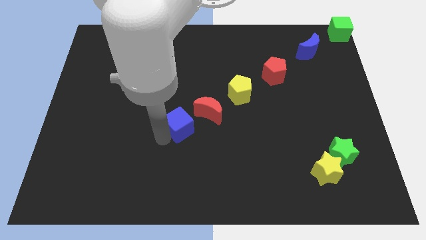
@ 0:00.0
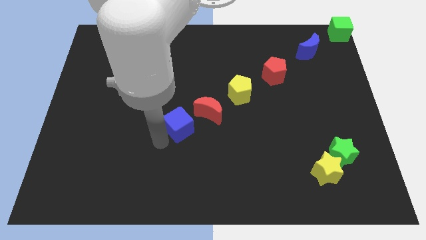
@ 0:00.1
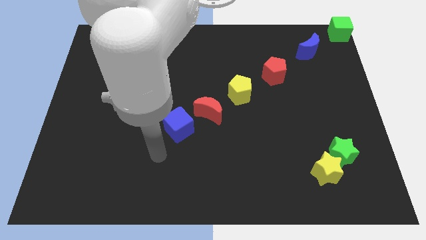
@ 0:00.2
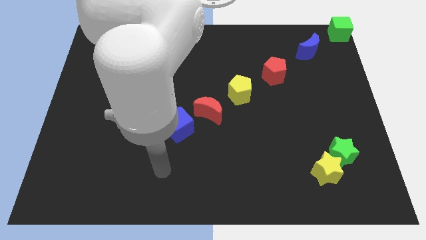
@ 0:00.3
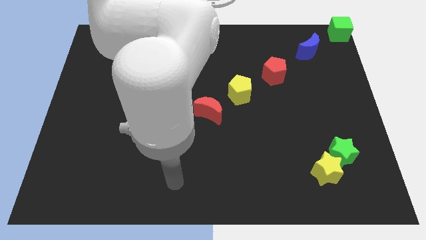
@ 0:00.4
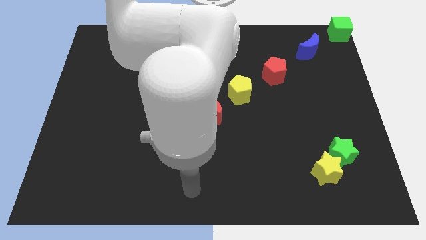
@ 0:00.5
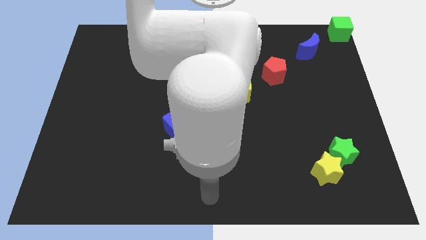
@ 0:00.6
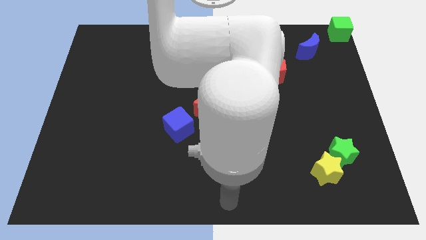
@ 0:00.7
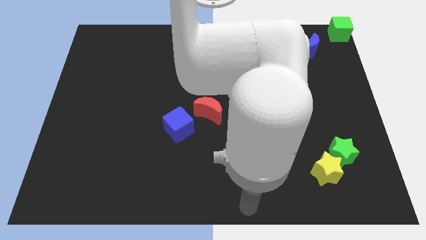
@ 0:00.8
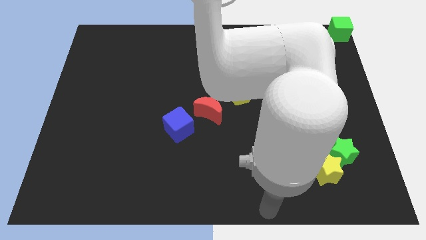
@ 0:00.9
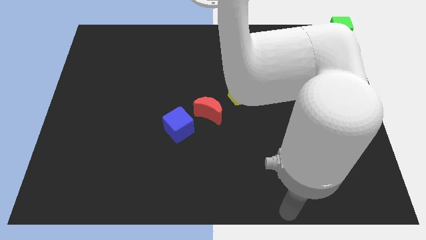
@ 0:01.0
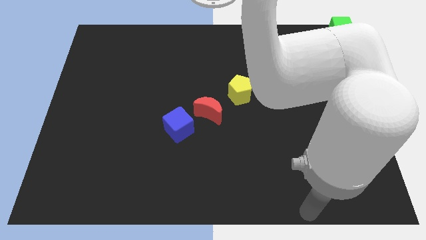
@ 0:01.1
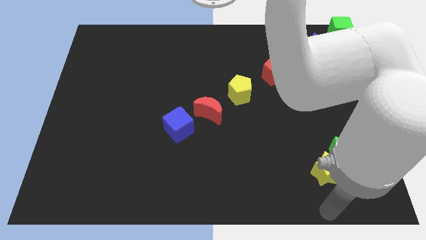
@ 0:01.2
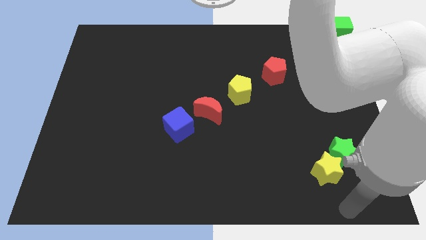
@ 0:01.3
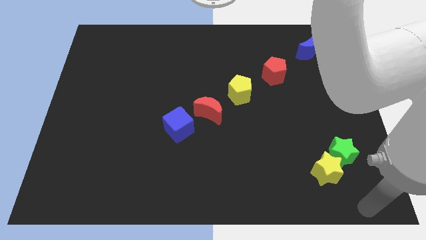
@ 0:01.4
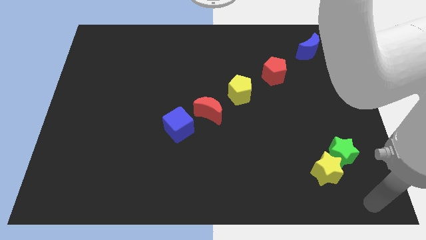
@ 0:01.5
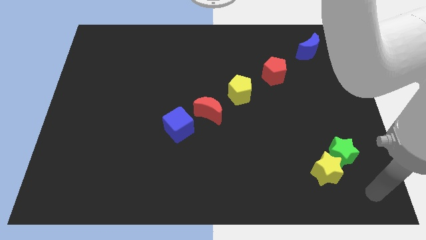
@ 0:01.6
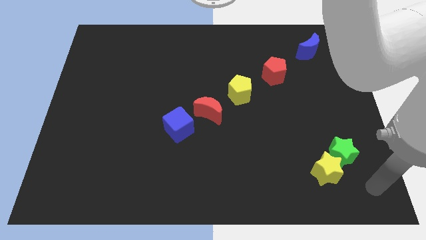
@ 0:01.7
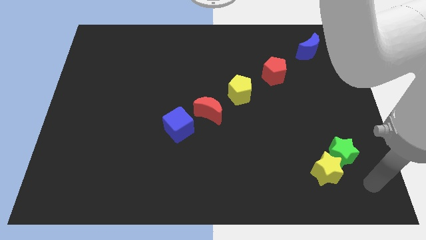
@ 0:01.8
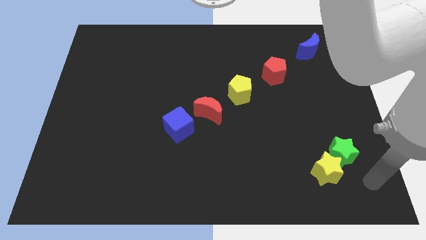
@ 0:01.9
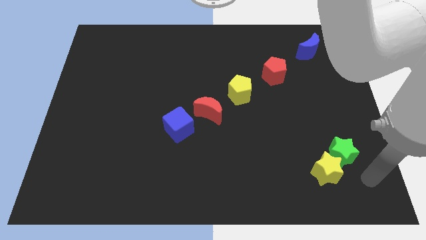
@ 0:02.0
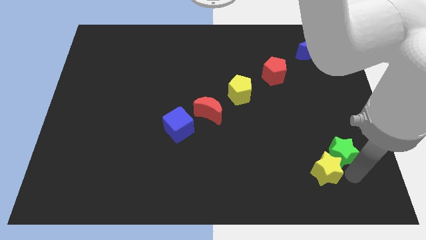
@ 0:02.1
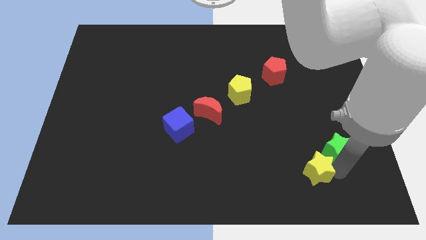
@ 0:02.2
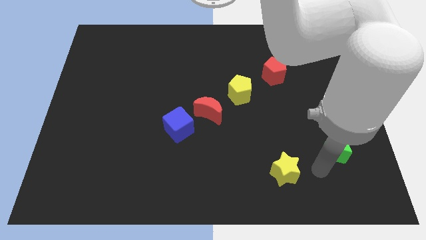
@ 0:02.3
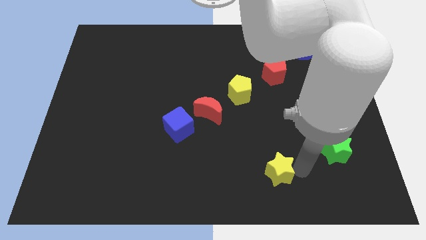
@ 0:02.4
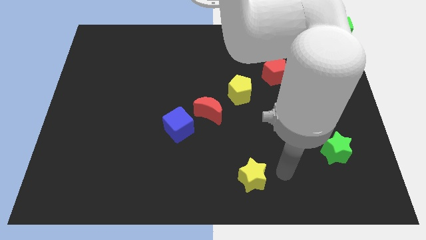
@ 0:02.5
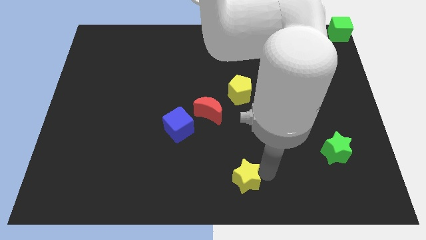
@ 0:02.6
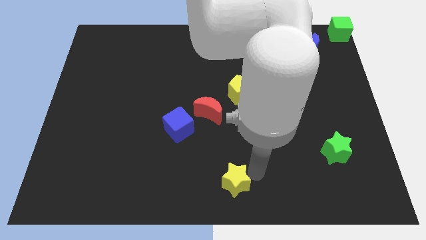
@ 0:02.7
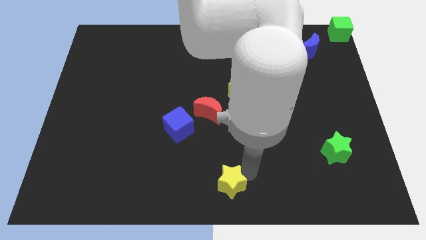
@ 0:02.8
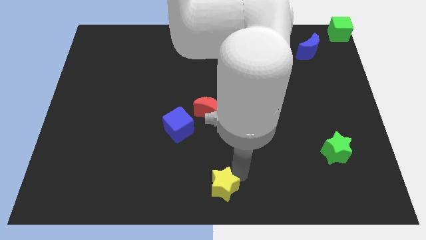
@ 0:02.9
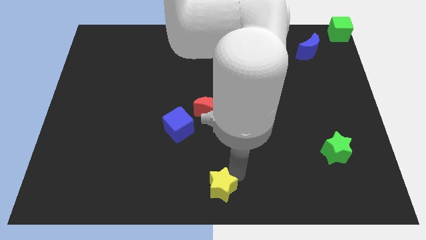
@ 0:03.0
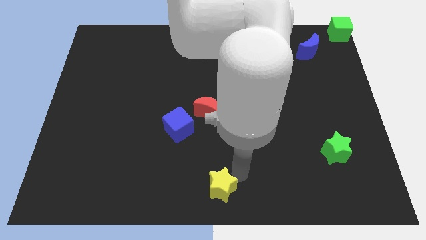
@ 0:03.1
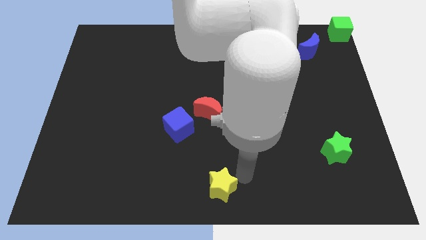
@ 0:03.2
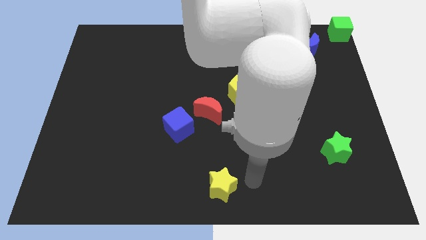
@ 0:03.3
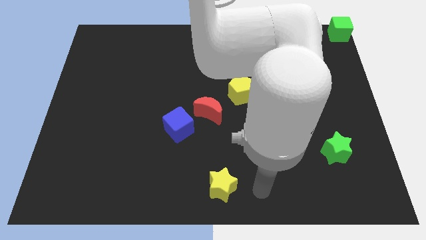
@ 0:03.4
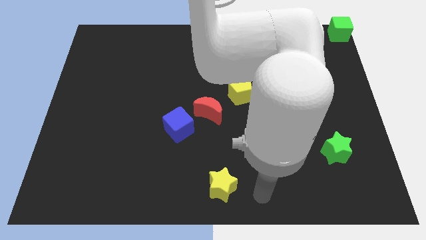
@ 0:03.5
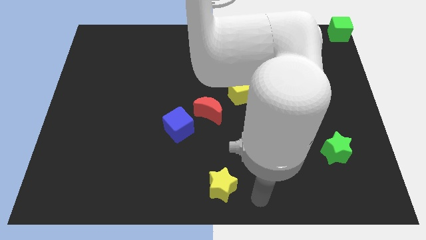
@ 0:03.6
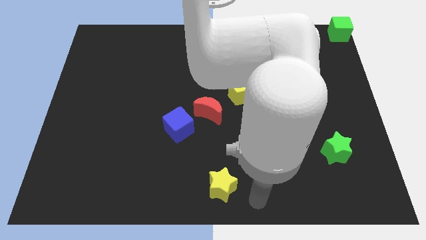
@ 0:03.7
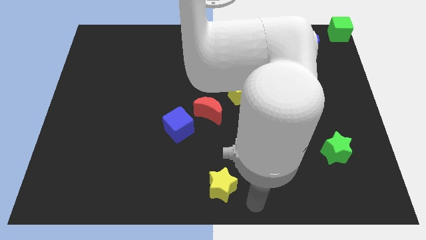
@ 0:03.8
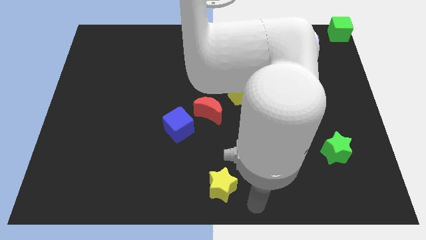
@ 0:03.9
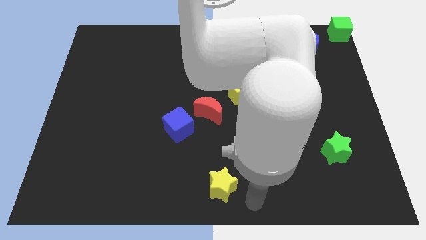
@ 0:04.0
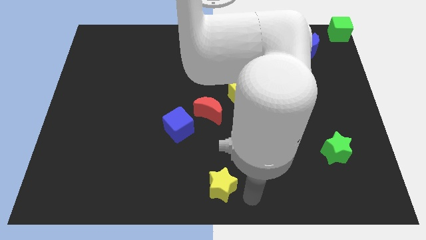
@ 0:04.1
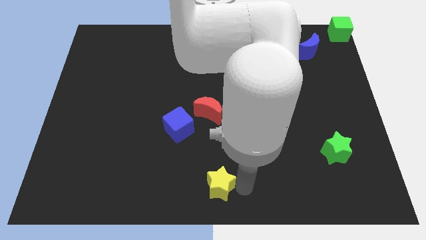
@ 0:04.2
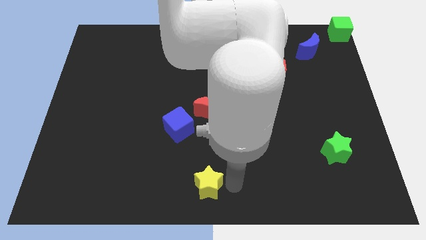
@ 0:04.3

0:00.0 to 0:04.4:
separate the yellow and the green star

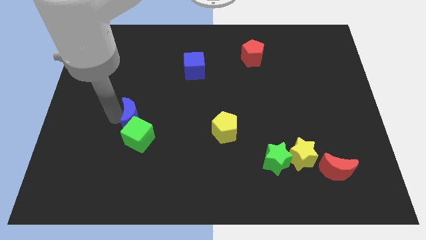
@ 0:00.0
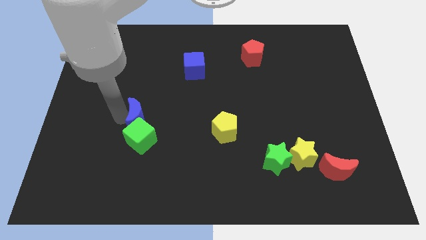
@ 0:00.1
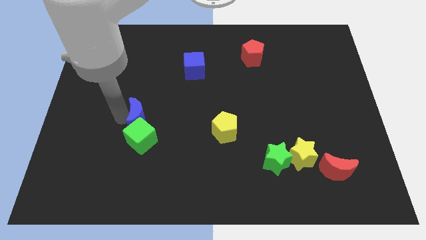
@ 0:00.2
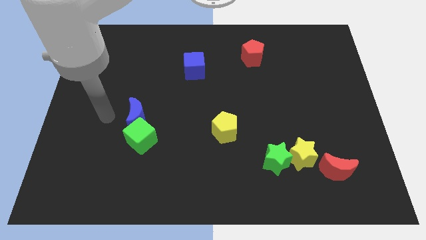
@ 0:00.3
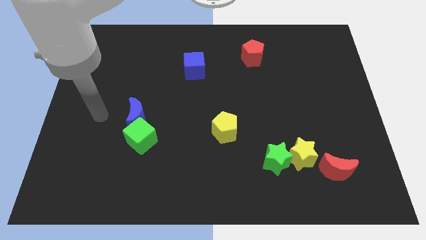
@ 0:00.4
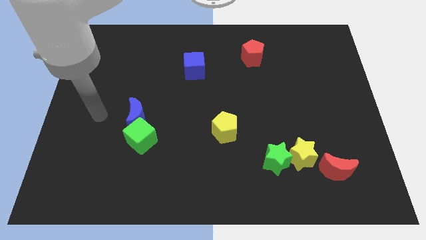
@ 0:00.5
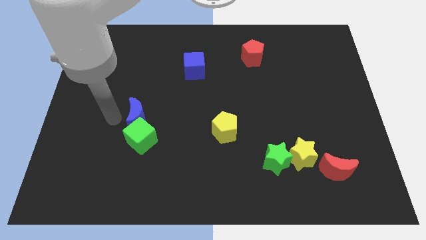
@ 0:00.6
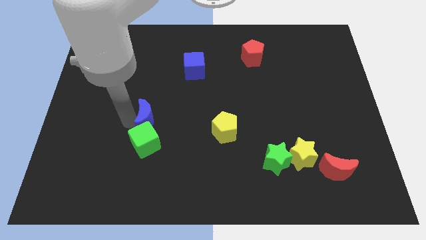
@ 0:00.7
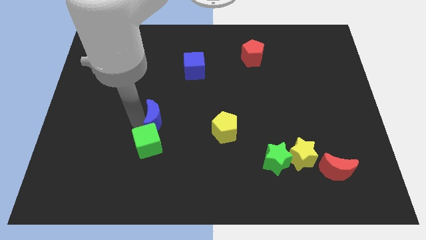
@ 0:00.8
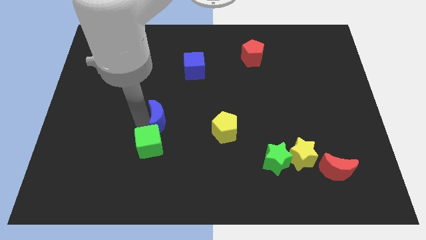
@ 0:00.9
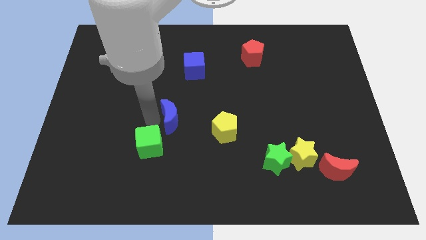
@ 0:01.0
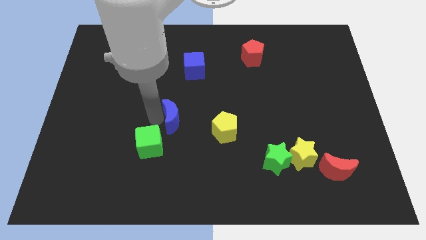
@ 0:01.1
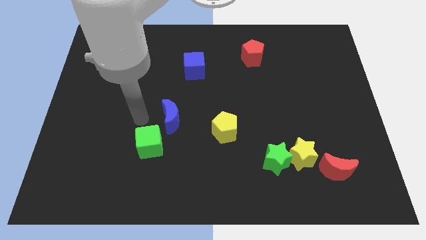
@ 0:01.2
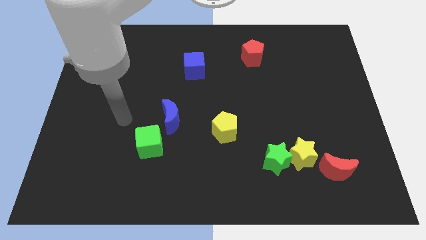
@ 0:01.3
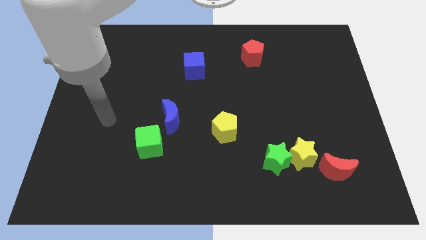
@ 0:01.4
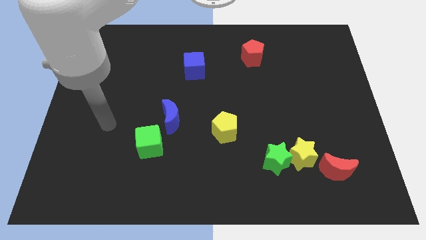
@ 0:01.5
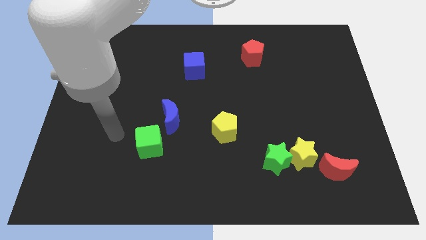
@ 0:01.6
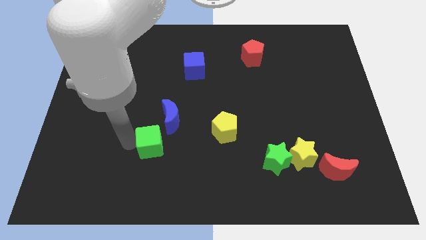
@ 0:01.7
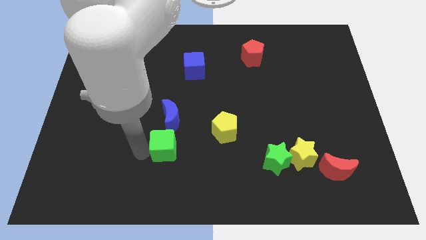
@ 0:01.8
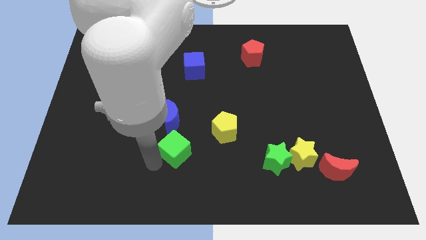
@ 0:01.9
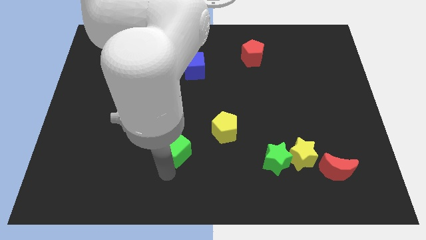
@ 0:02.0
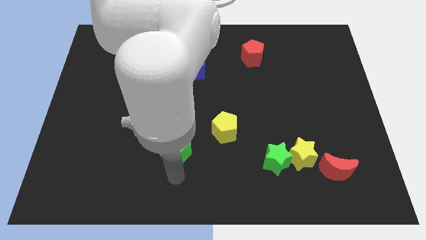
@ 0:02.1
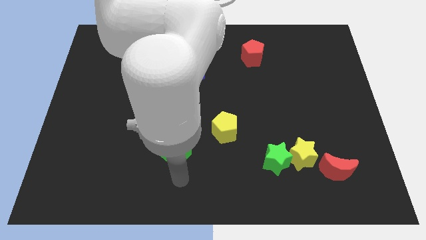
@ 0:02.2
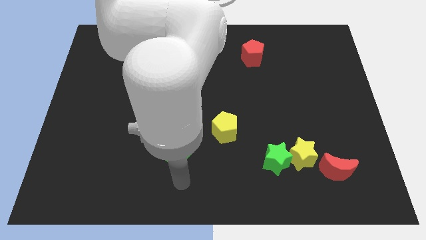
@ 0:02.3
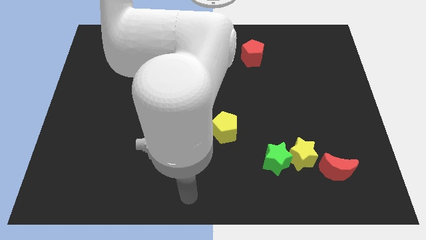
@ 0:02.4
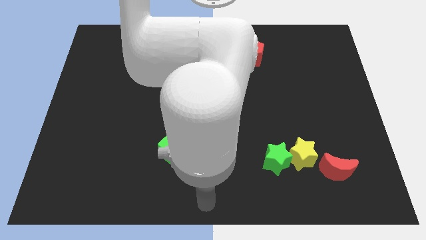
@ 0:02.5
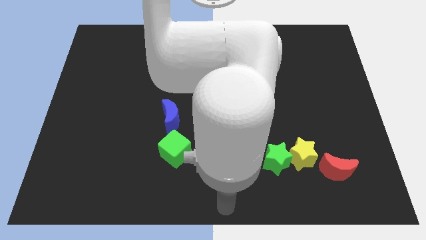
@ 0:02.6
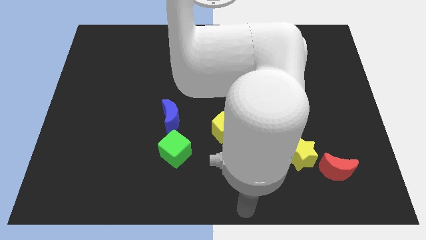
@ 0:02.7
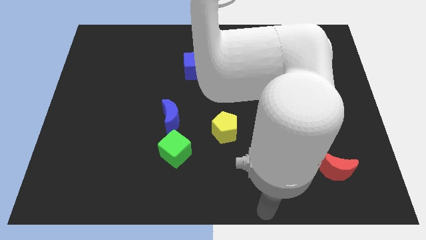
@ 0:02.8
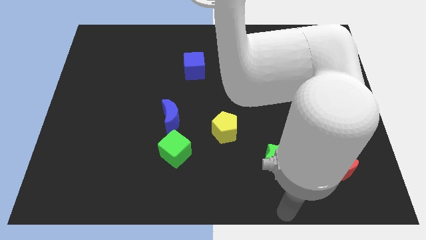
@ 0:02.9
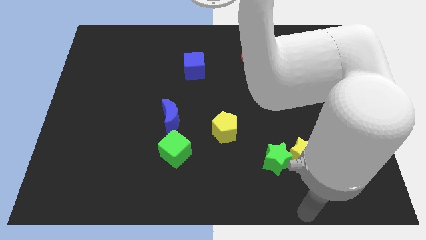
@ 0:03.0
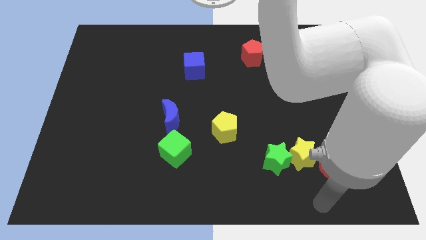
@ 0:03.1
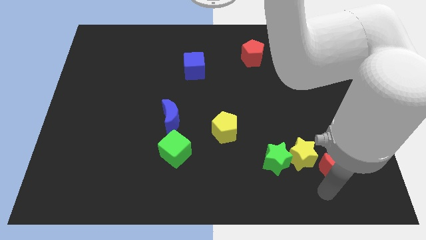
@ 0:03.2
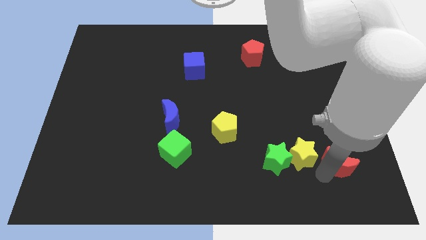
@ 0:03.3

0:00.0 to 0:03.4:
place the arm down to the red moon

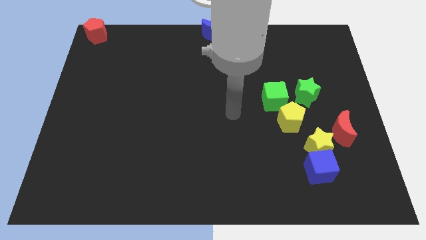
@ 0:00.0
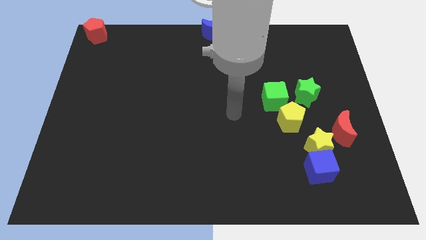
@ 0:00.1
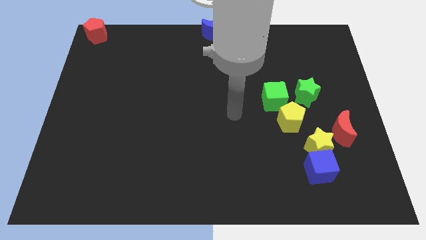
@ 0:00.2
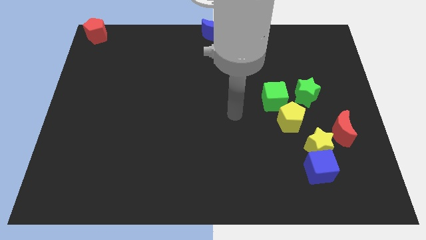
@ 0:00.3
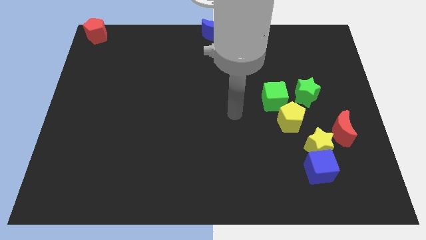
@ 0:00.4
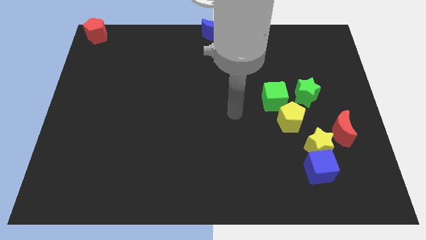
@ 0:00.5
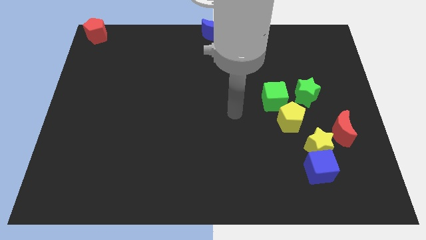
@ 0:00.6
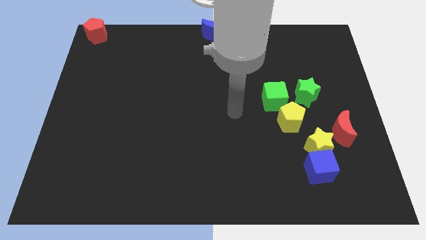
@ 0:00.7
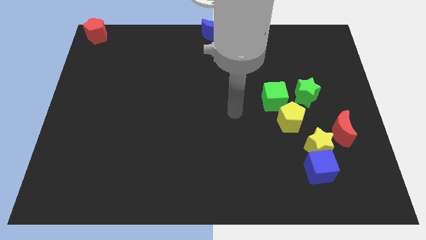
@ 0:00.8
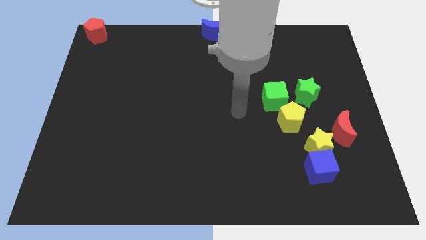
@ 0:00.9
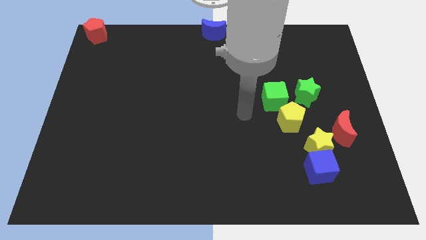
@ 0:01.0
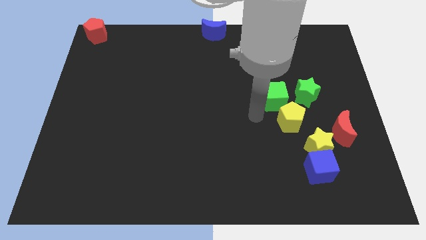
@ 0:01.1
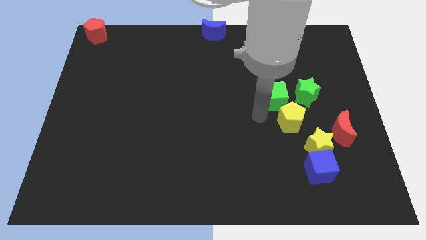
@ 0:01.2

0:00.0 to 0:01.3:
place the arm diagonal to the green cube
